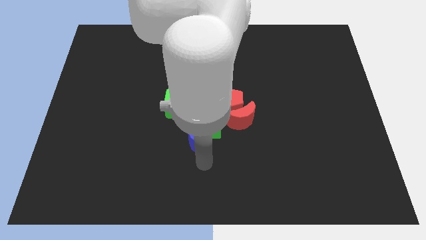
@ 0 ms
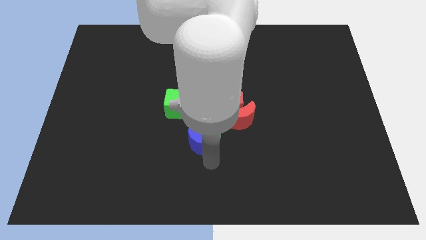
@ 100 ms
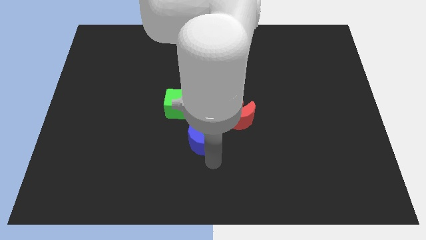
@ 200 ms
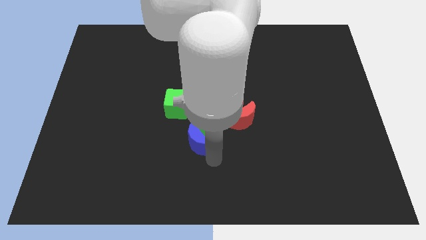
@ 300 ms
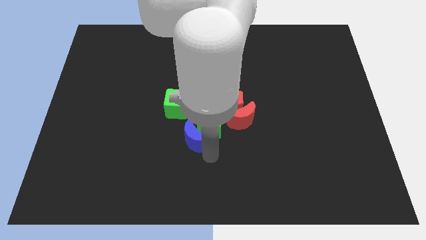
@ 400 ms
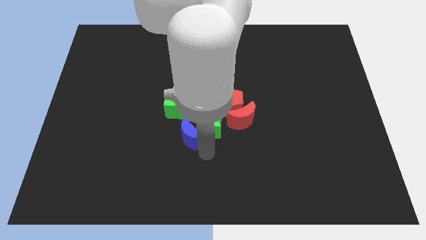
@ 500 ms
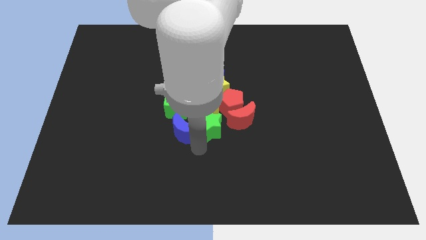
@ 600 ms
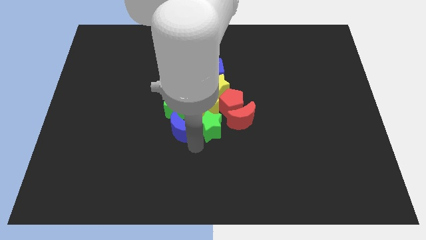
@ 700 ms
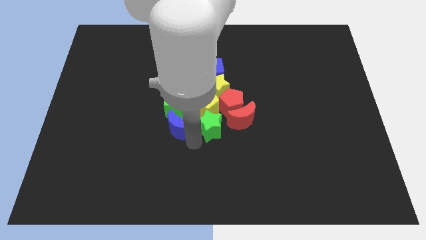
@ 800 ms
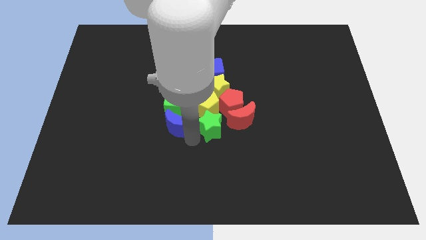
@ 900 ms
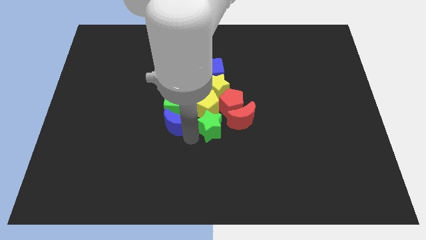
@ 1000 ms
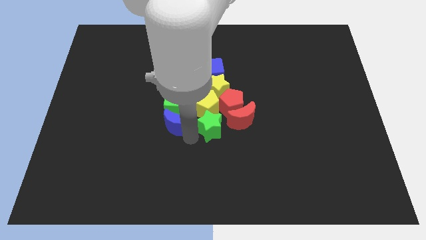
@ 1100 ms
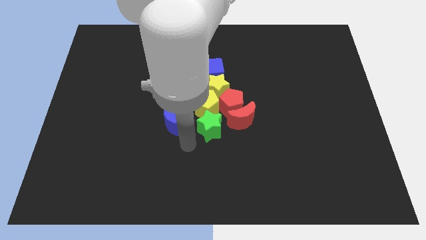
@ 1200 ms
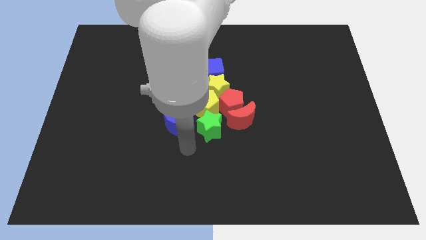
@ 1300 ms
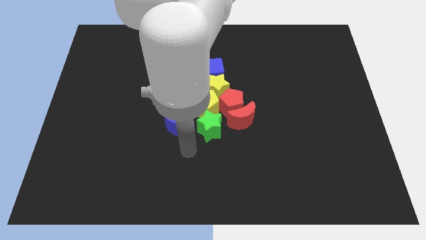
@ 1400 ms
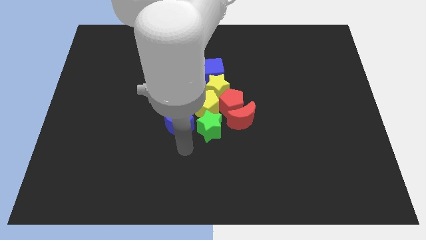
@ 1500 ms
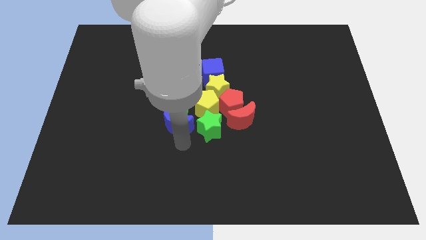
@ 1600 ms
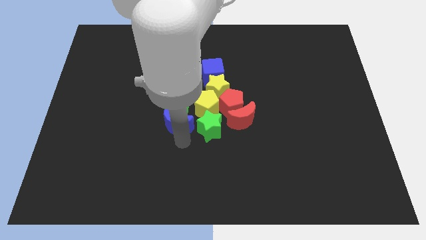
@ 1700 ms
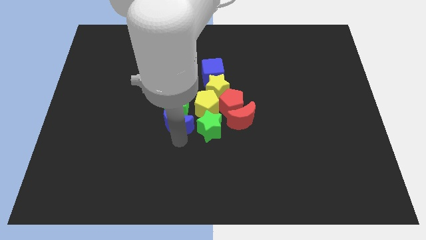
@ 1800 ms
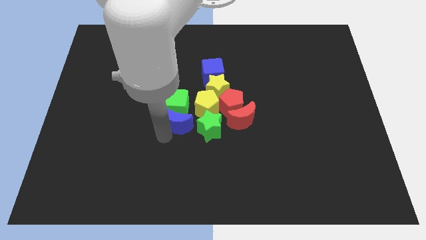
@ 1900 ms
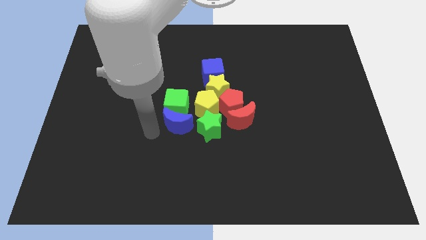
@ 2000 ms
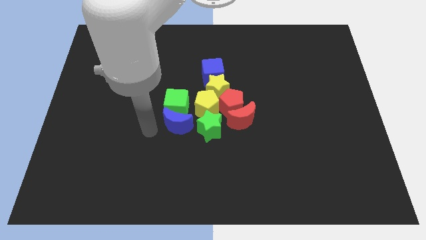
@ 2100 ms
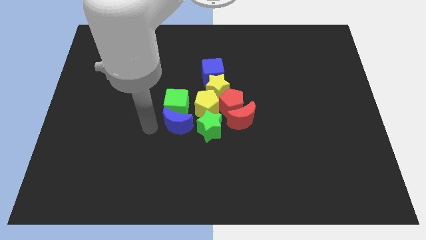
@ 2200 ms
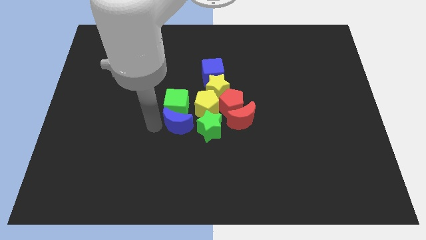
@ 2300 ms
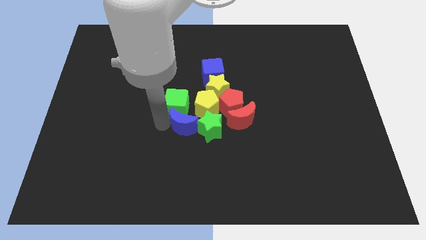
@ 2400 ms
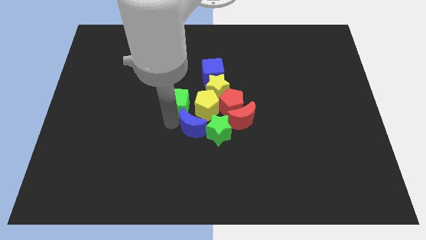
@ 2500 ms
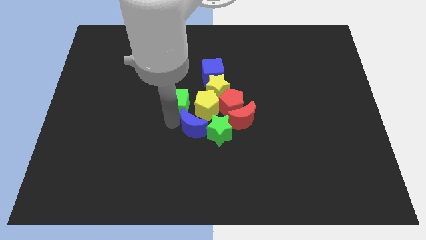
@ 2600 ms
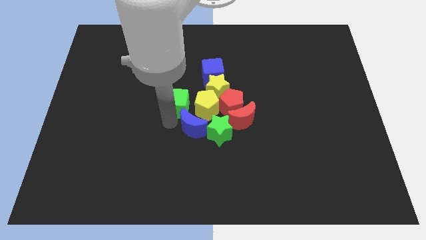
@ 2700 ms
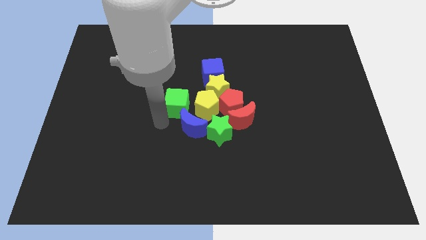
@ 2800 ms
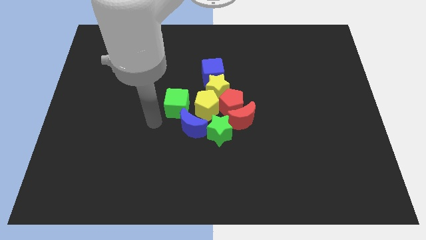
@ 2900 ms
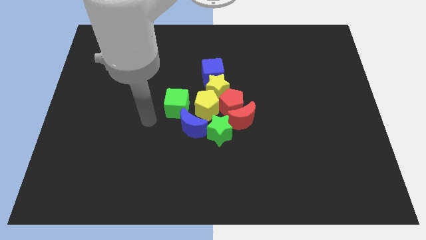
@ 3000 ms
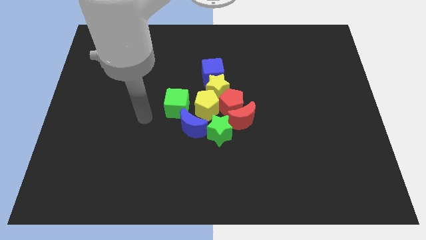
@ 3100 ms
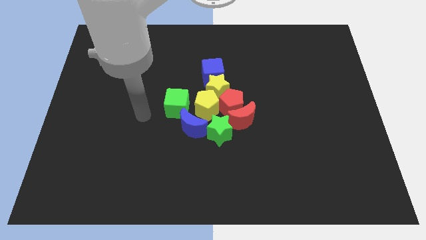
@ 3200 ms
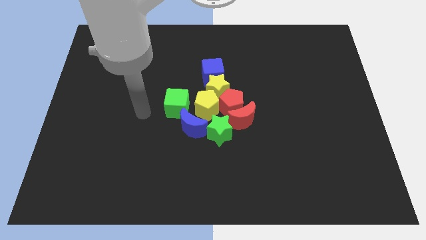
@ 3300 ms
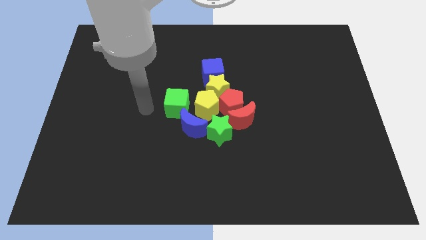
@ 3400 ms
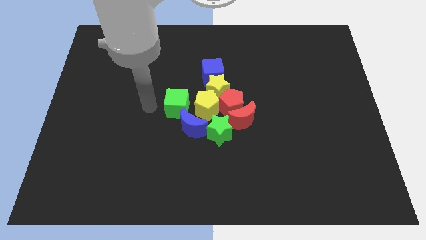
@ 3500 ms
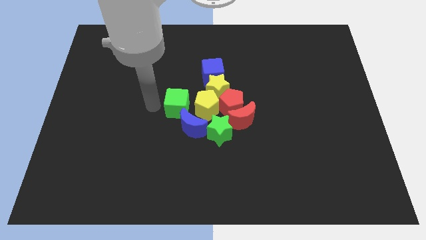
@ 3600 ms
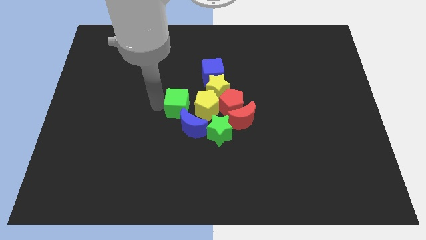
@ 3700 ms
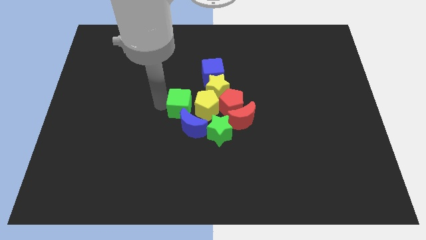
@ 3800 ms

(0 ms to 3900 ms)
move blue crescent towards the center of the board

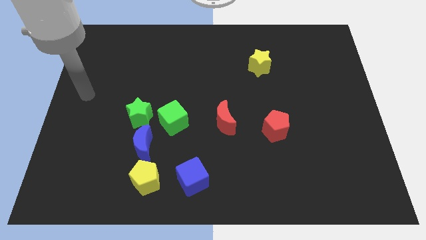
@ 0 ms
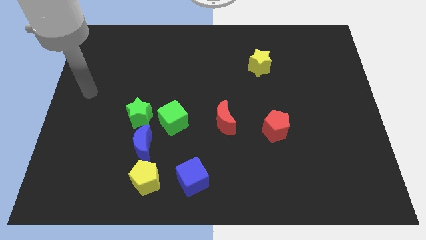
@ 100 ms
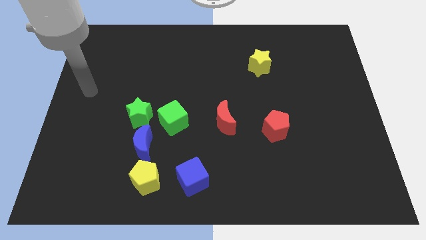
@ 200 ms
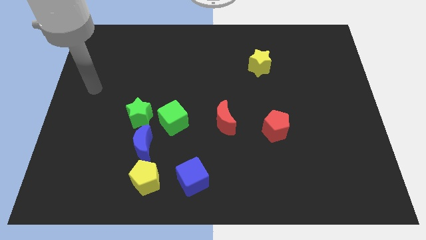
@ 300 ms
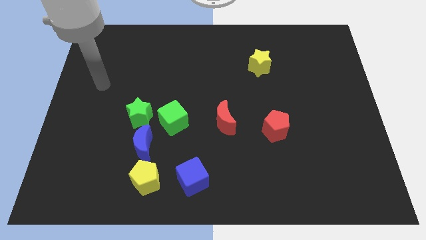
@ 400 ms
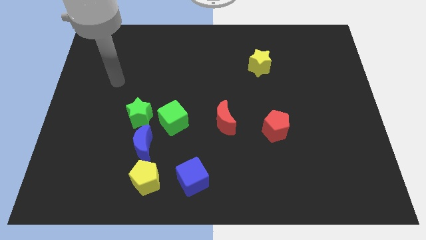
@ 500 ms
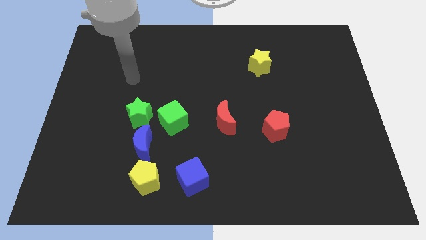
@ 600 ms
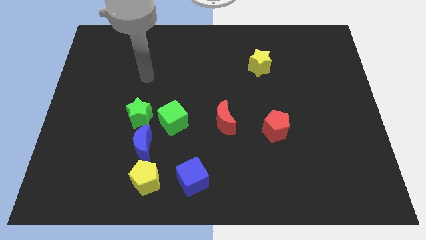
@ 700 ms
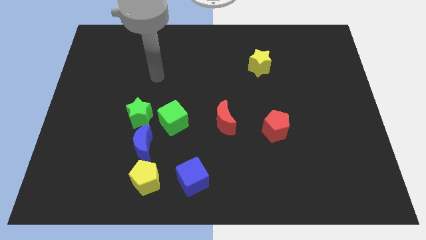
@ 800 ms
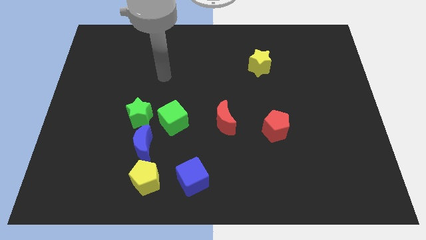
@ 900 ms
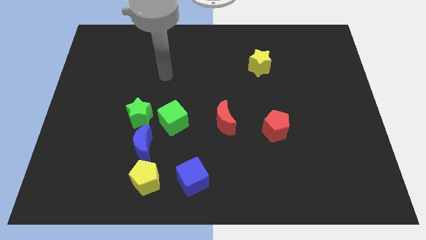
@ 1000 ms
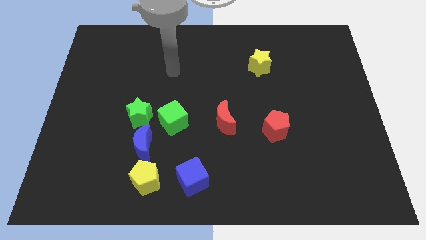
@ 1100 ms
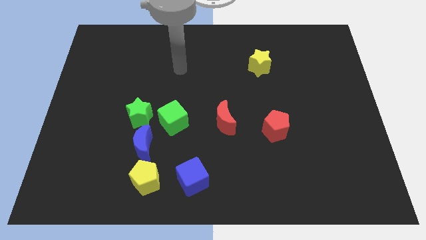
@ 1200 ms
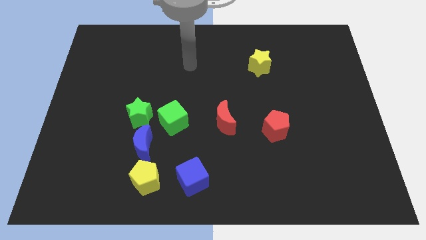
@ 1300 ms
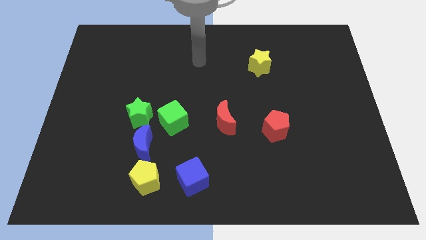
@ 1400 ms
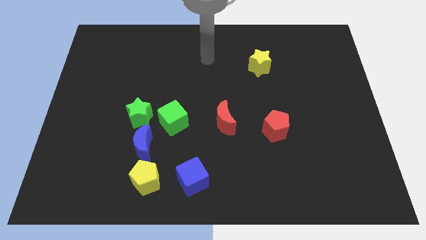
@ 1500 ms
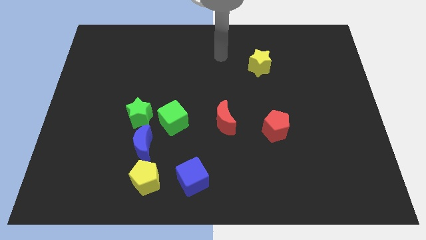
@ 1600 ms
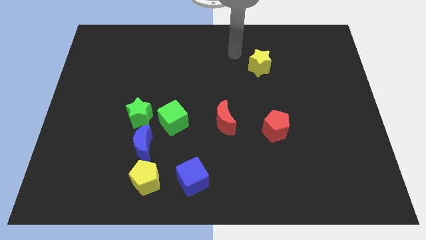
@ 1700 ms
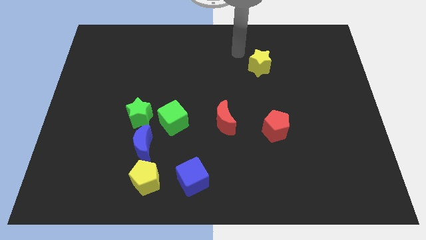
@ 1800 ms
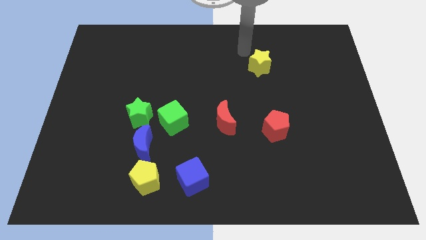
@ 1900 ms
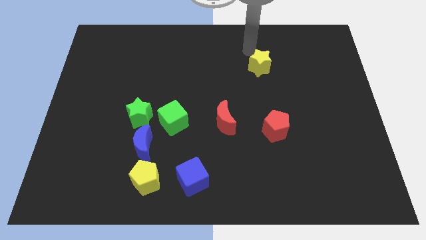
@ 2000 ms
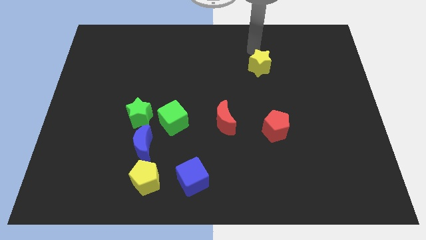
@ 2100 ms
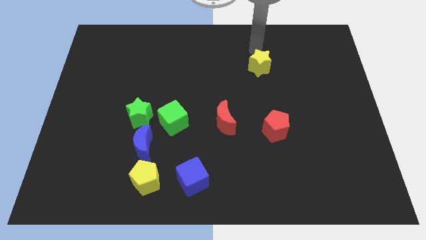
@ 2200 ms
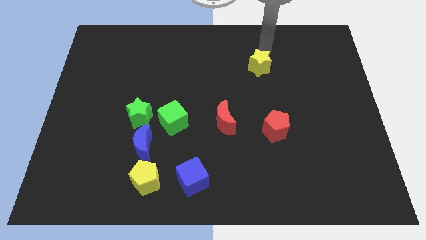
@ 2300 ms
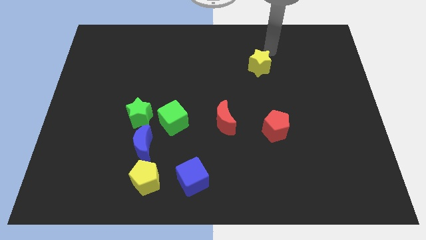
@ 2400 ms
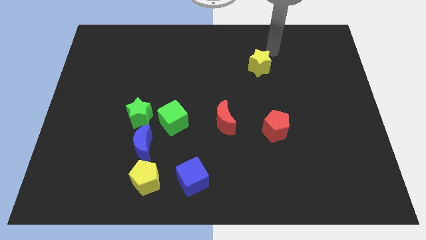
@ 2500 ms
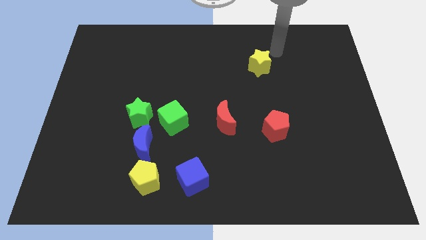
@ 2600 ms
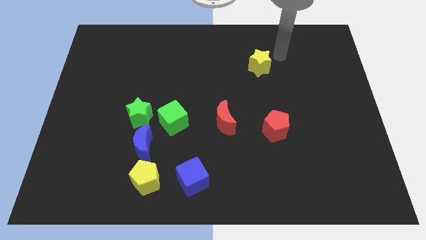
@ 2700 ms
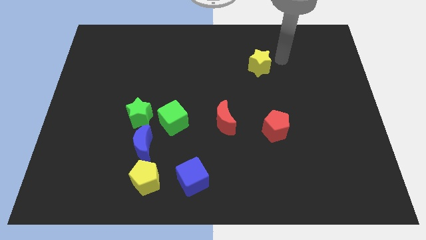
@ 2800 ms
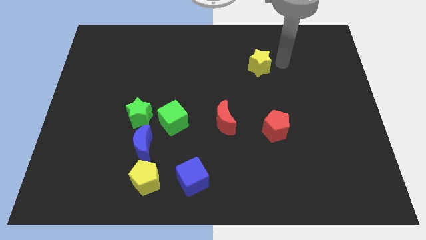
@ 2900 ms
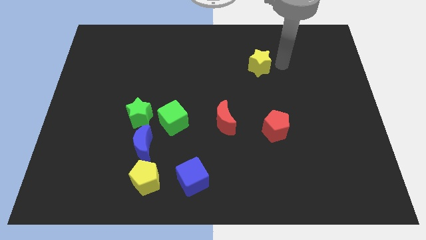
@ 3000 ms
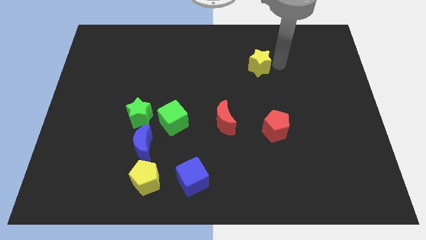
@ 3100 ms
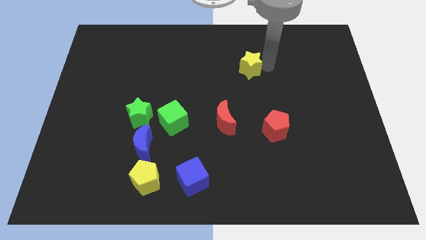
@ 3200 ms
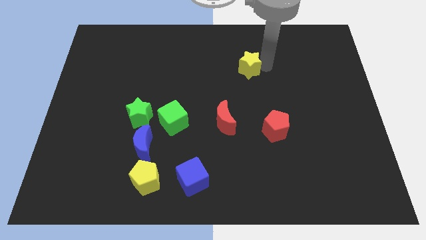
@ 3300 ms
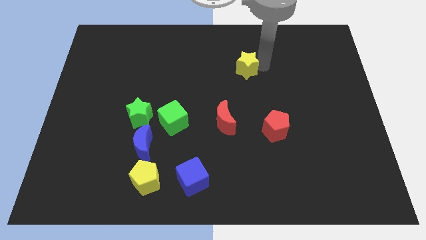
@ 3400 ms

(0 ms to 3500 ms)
point your arm right to yellow star

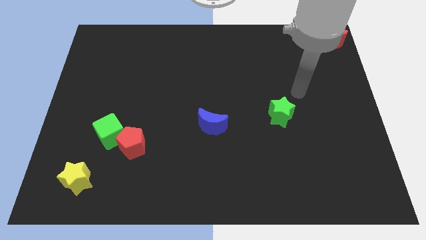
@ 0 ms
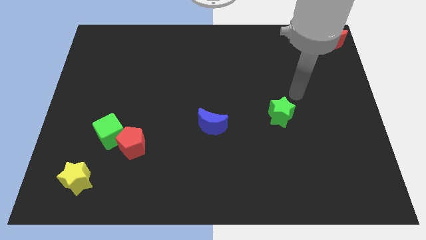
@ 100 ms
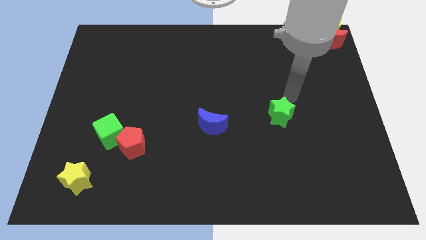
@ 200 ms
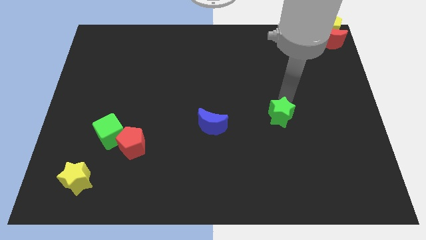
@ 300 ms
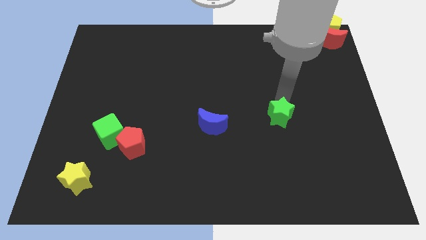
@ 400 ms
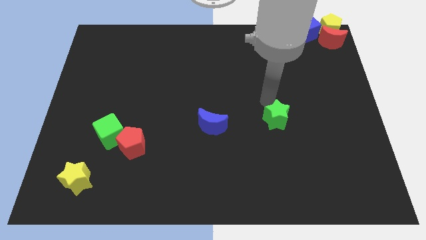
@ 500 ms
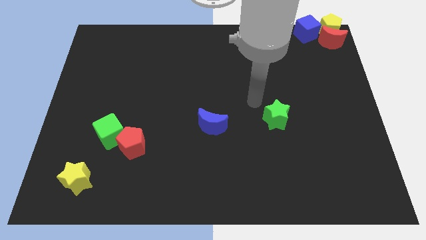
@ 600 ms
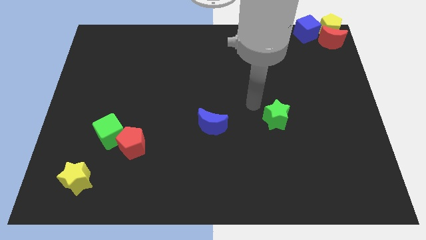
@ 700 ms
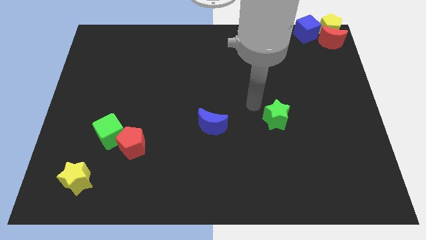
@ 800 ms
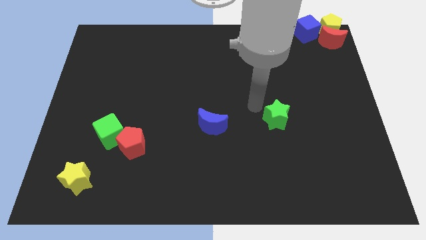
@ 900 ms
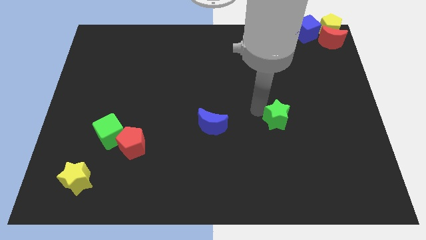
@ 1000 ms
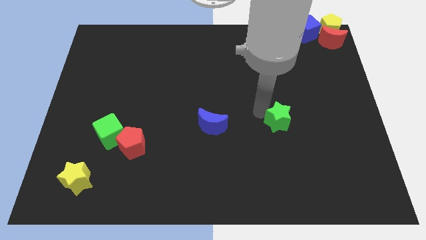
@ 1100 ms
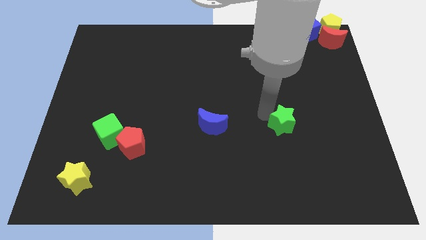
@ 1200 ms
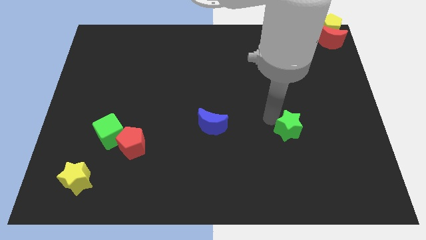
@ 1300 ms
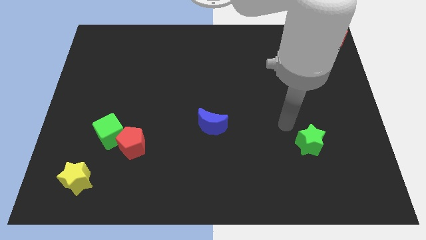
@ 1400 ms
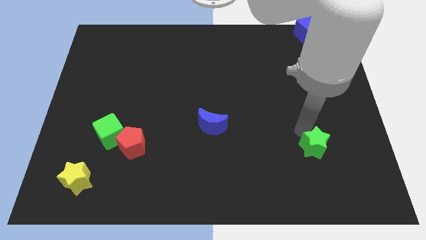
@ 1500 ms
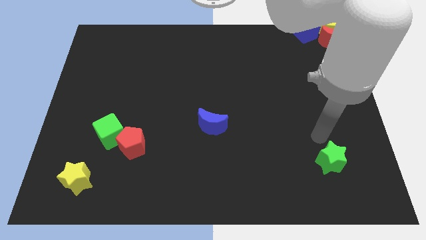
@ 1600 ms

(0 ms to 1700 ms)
slide the green star diagonally bottom right to the blue cube
